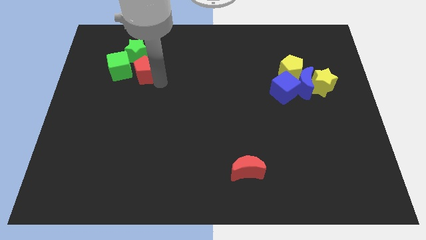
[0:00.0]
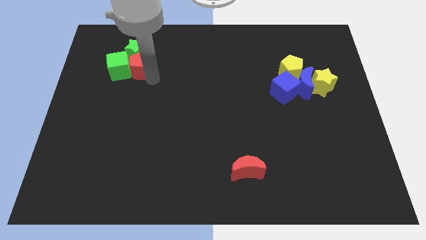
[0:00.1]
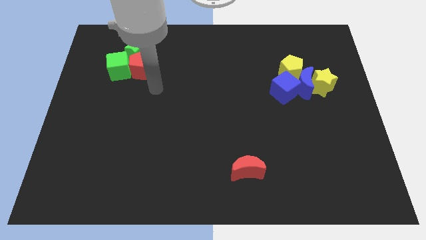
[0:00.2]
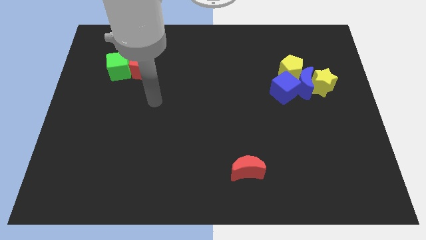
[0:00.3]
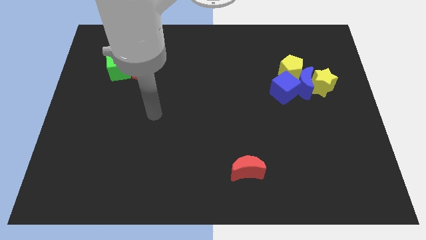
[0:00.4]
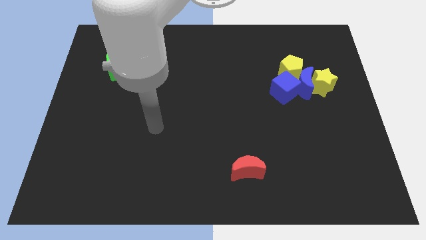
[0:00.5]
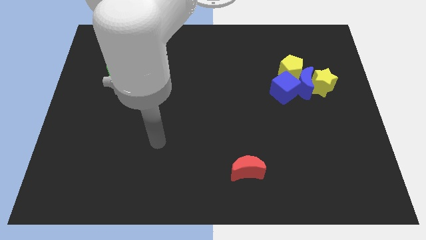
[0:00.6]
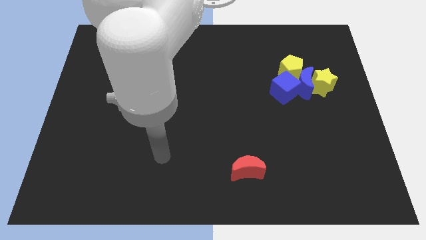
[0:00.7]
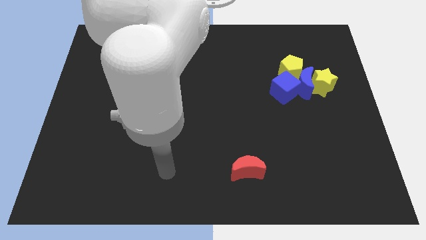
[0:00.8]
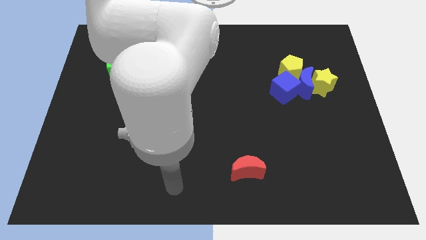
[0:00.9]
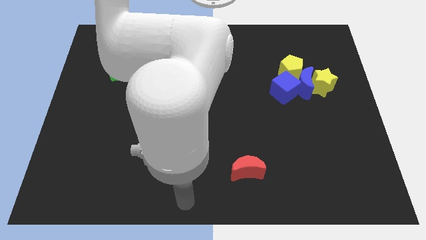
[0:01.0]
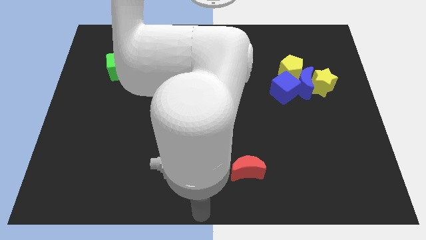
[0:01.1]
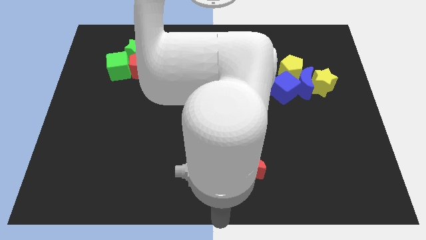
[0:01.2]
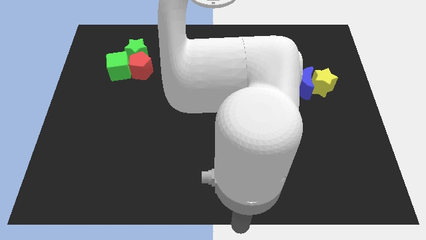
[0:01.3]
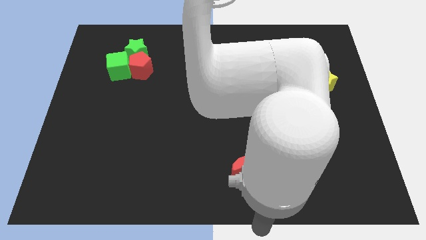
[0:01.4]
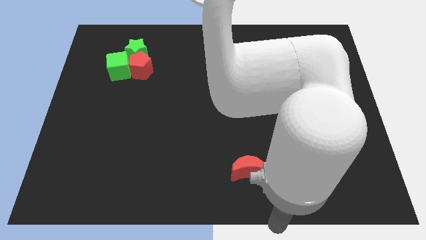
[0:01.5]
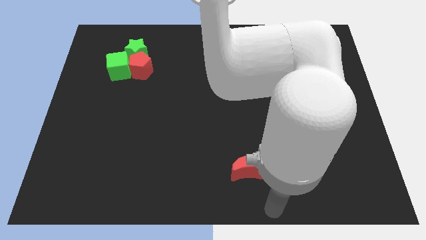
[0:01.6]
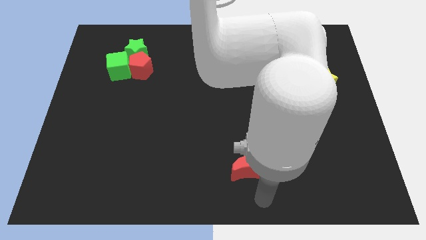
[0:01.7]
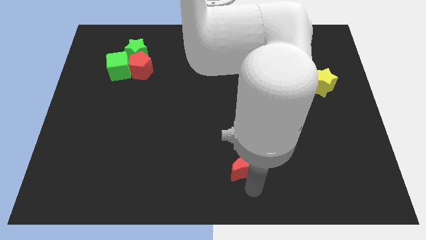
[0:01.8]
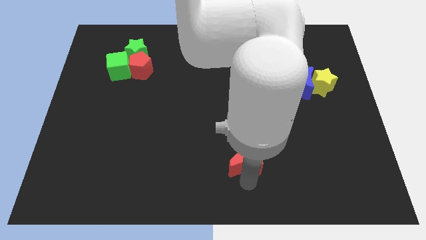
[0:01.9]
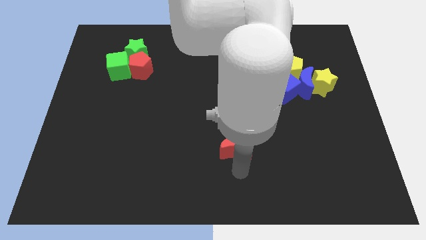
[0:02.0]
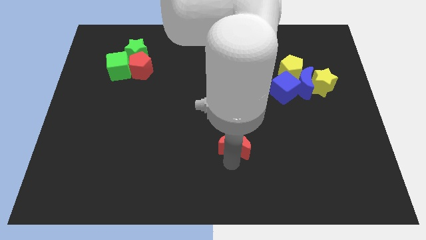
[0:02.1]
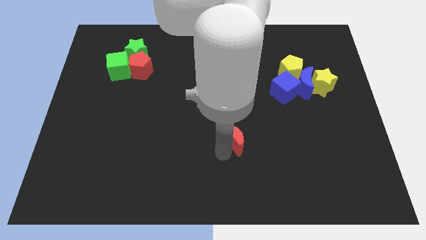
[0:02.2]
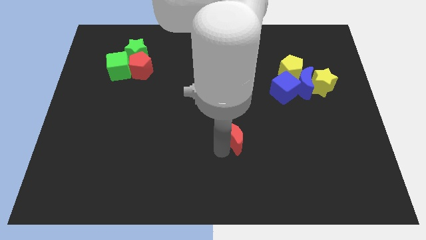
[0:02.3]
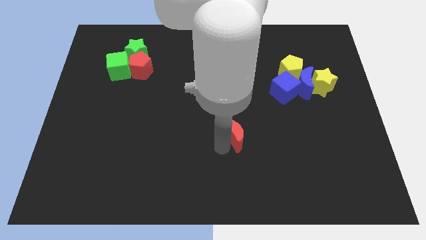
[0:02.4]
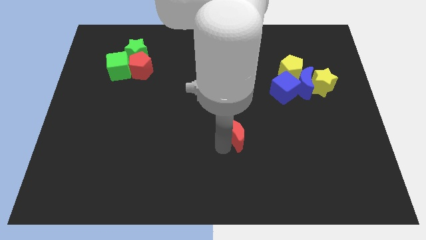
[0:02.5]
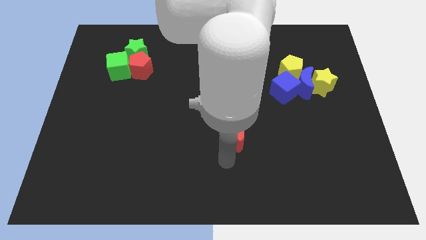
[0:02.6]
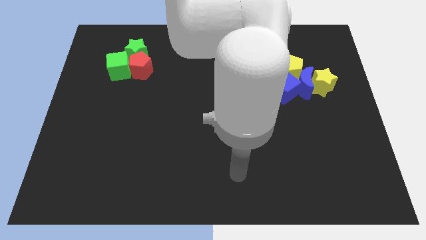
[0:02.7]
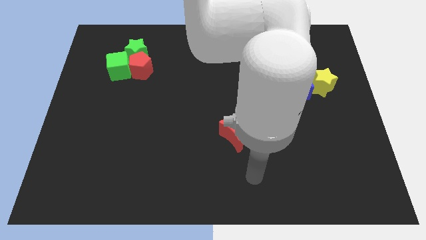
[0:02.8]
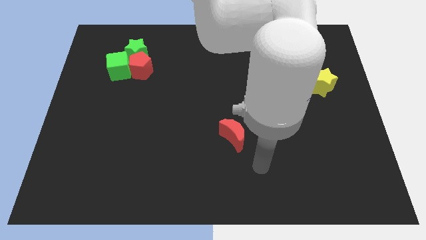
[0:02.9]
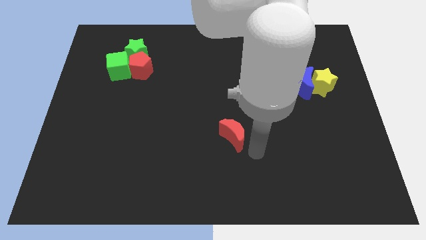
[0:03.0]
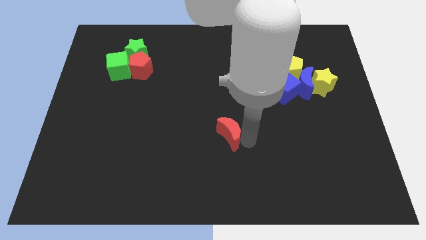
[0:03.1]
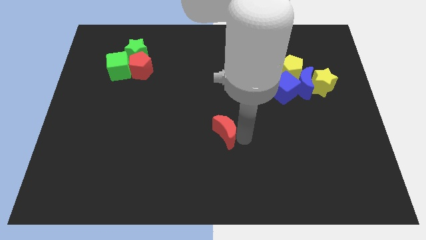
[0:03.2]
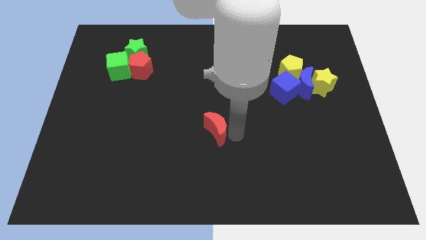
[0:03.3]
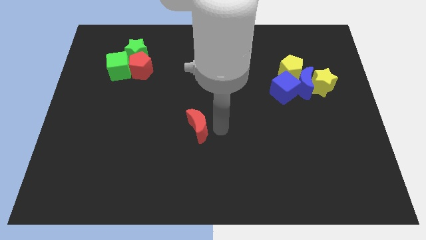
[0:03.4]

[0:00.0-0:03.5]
place the red crescent at the center of the board

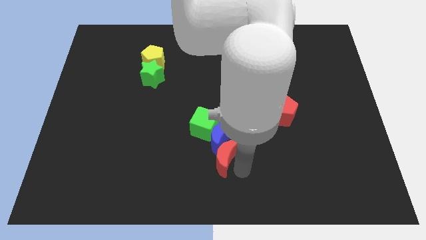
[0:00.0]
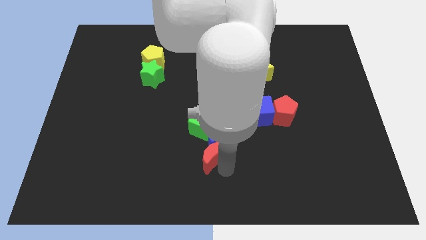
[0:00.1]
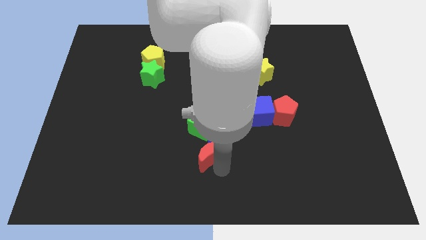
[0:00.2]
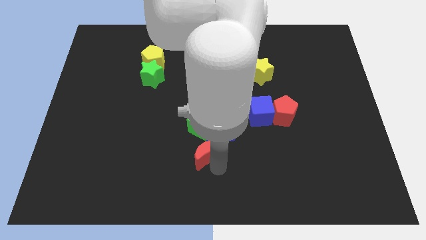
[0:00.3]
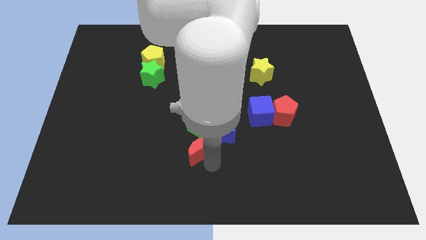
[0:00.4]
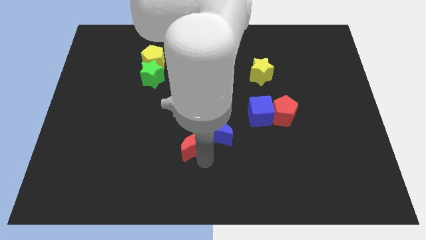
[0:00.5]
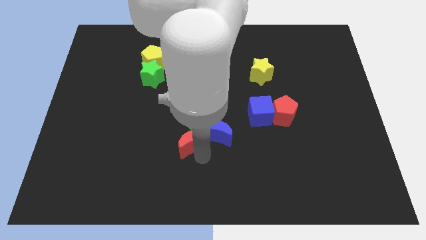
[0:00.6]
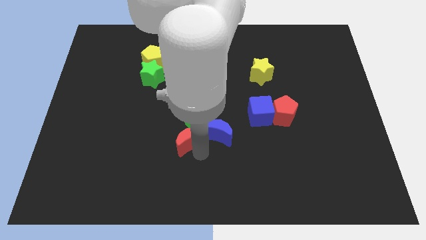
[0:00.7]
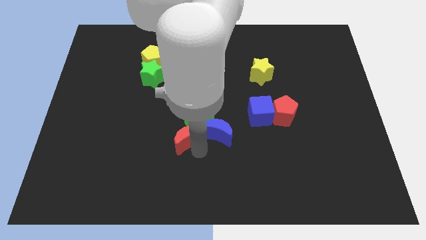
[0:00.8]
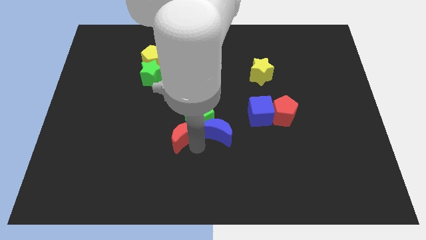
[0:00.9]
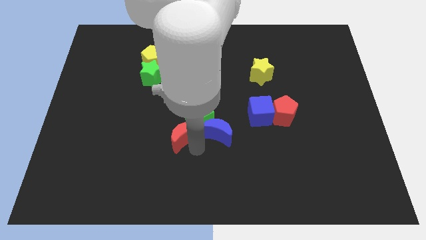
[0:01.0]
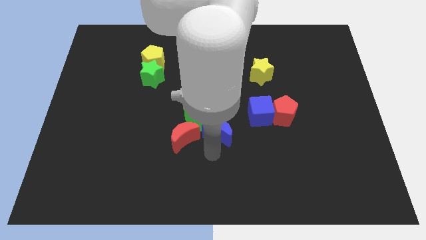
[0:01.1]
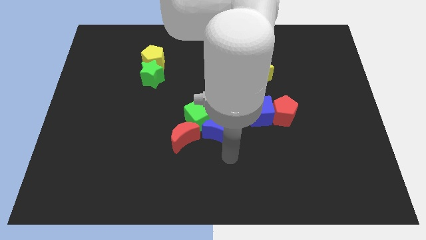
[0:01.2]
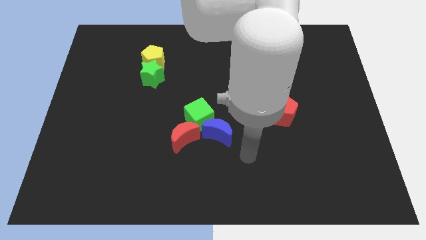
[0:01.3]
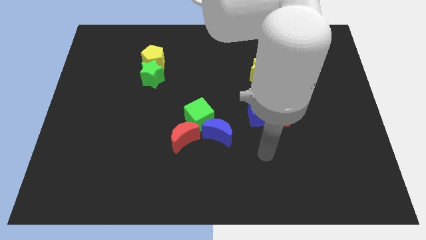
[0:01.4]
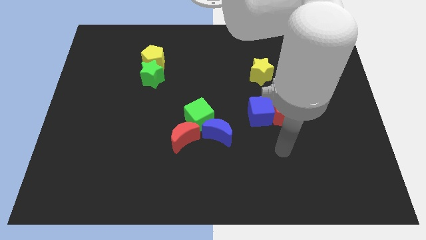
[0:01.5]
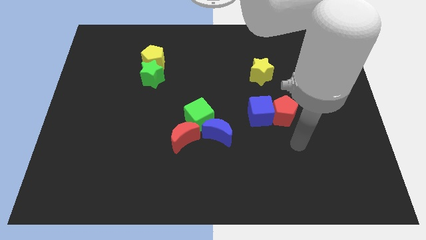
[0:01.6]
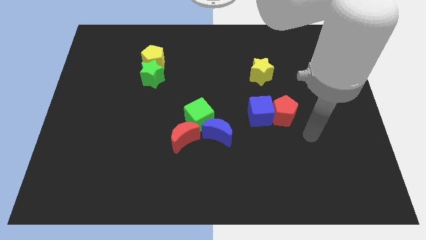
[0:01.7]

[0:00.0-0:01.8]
make the green cube placed above the blue moon and the red moon

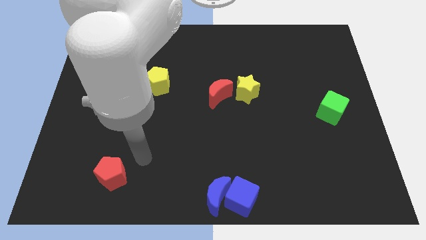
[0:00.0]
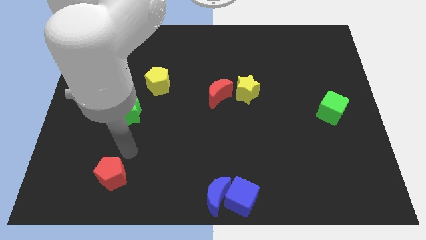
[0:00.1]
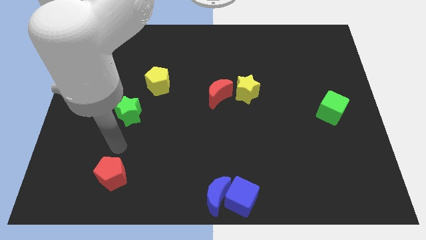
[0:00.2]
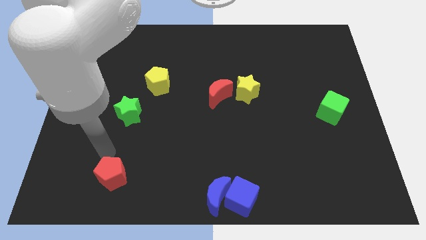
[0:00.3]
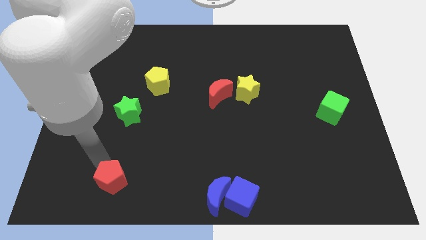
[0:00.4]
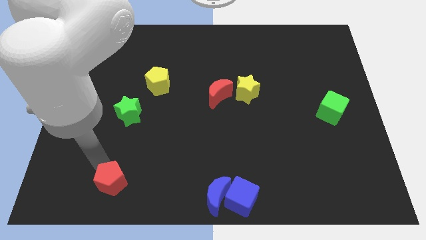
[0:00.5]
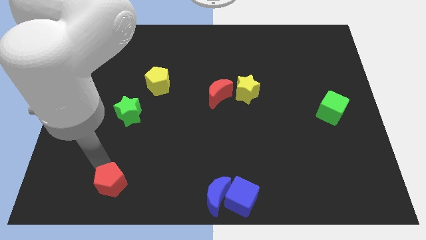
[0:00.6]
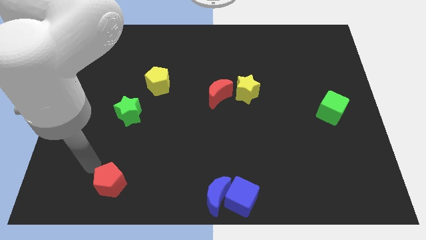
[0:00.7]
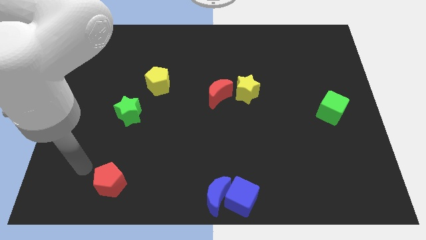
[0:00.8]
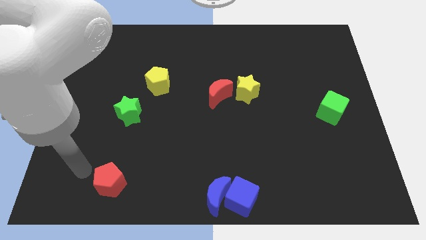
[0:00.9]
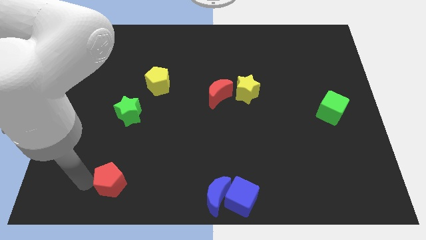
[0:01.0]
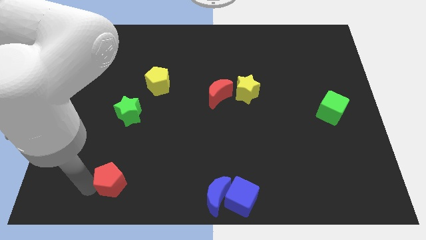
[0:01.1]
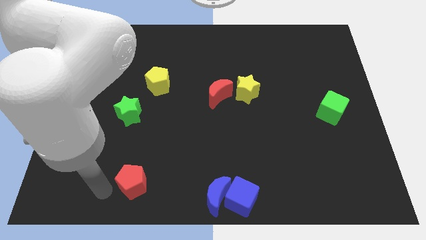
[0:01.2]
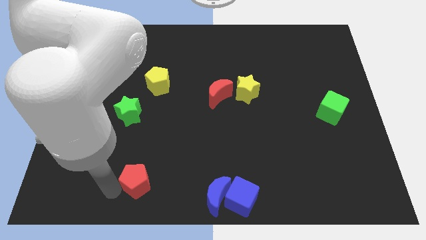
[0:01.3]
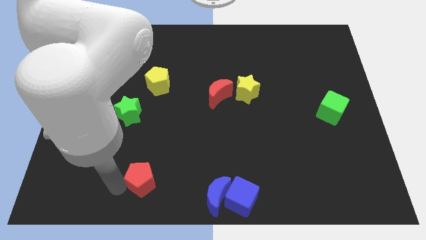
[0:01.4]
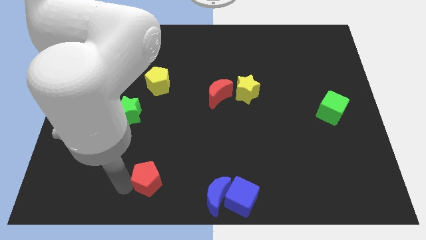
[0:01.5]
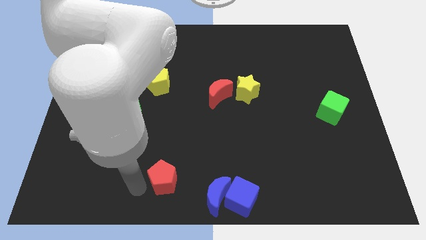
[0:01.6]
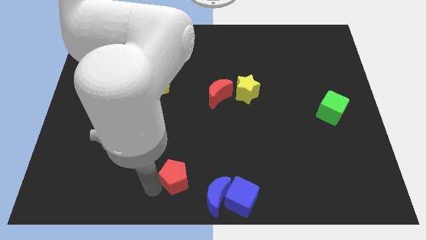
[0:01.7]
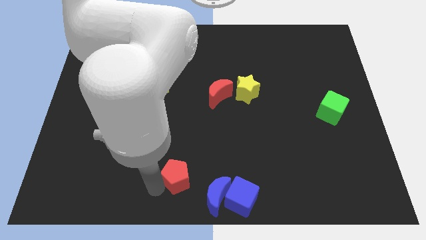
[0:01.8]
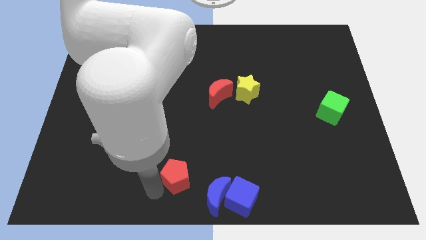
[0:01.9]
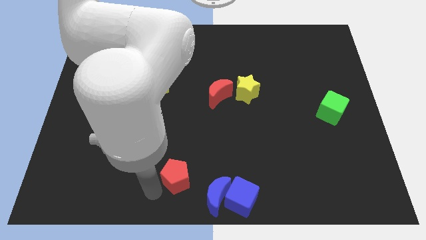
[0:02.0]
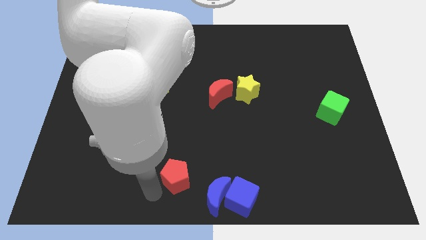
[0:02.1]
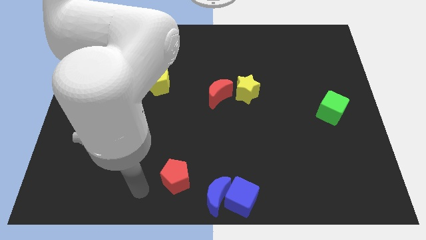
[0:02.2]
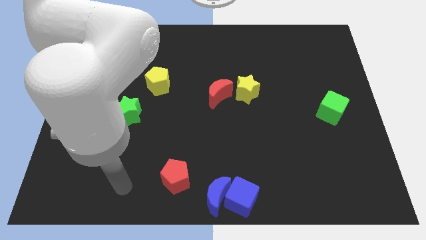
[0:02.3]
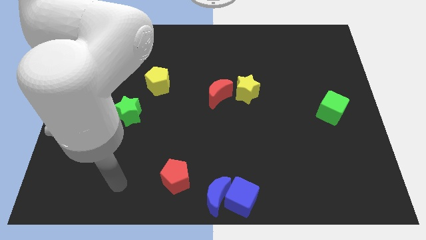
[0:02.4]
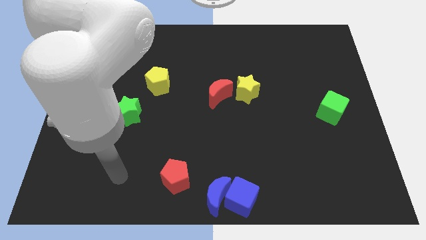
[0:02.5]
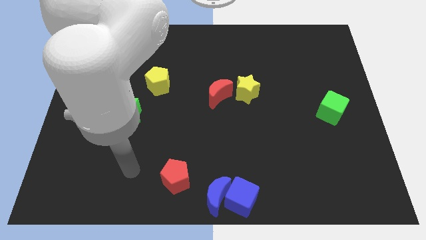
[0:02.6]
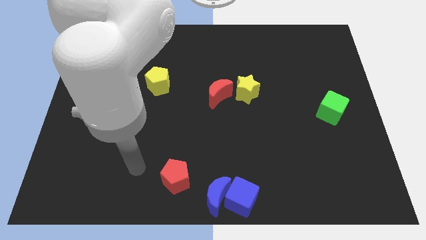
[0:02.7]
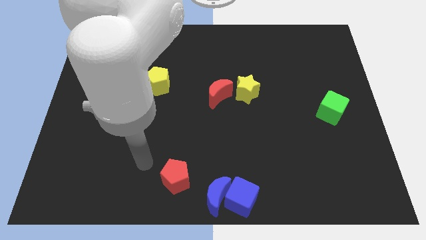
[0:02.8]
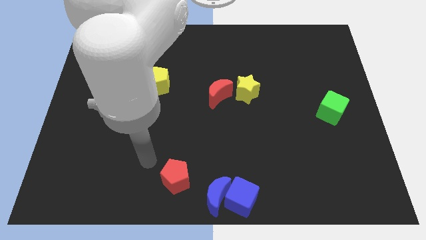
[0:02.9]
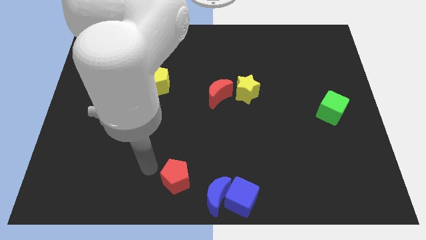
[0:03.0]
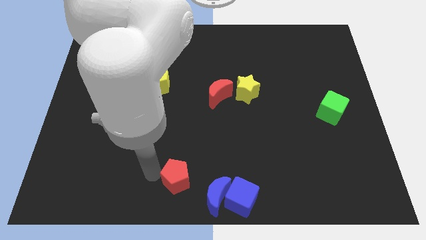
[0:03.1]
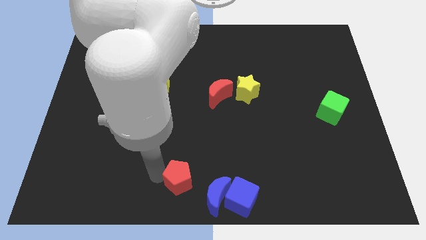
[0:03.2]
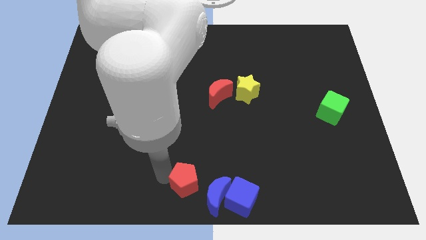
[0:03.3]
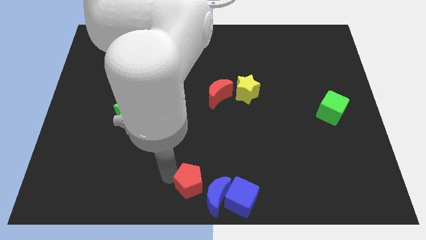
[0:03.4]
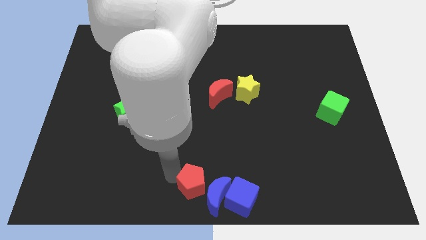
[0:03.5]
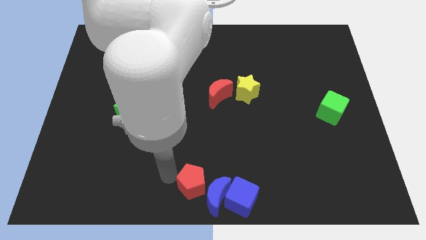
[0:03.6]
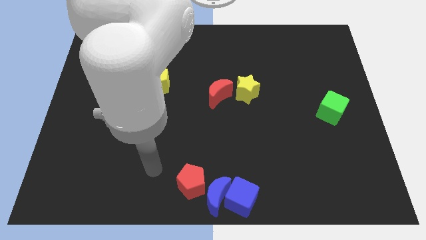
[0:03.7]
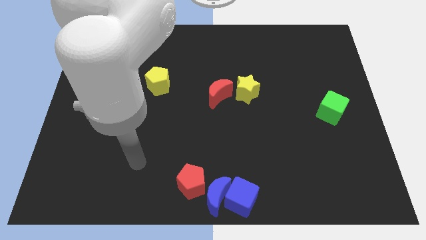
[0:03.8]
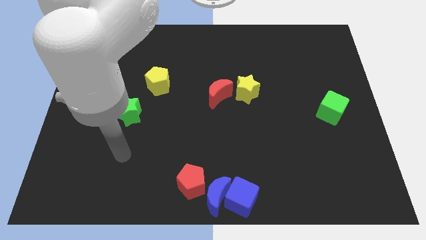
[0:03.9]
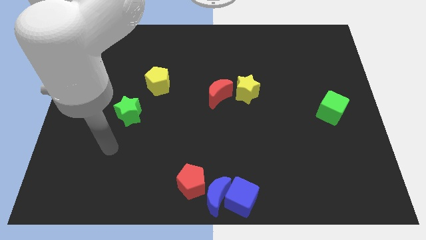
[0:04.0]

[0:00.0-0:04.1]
slide red pentagon into blue moon
